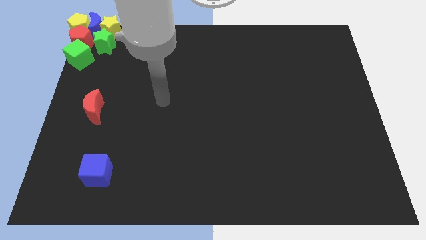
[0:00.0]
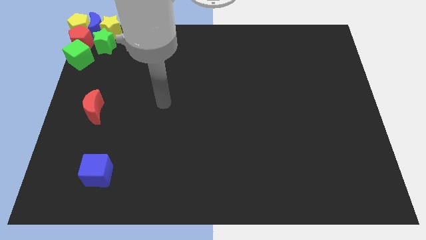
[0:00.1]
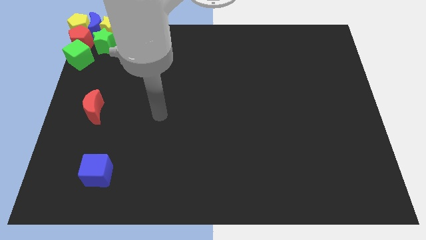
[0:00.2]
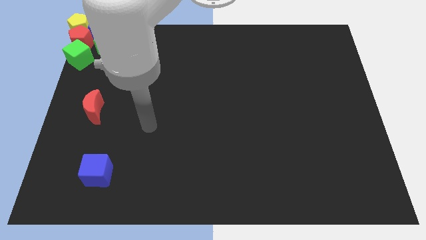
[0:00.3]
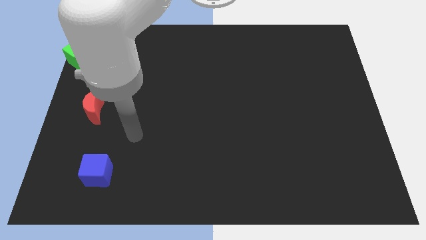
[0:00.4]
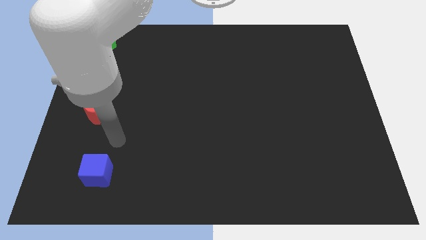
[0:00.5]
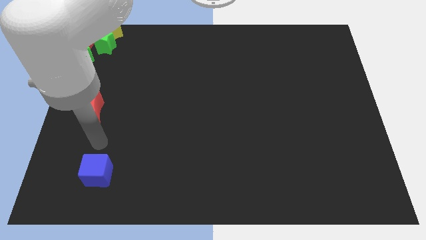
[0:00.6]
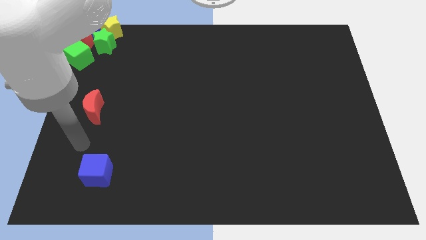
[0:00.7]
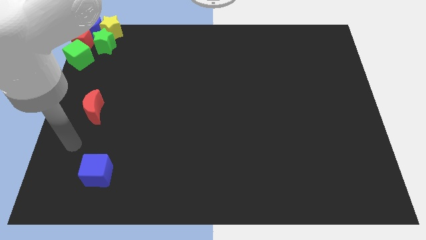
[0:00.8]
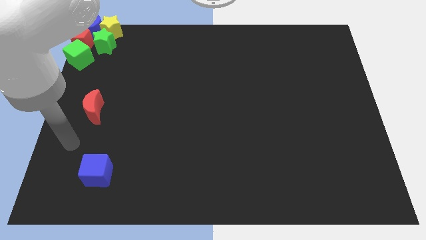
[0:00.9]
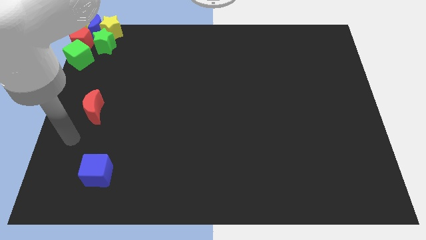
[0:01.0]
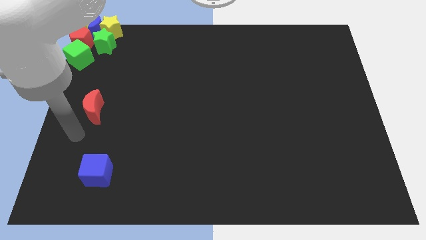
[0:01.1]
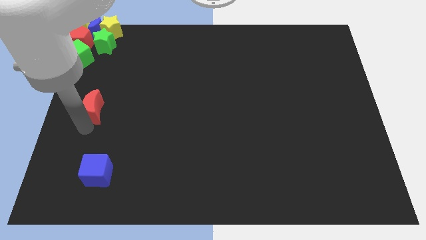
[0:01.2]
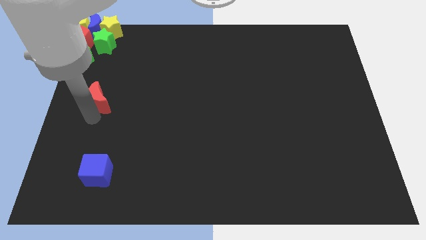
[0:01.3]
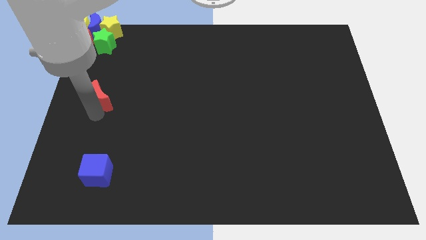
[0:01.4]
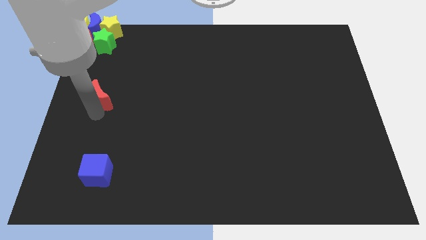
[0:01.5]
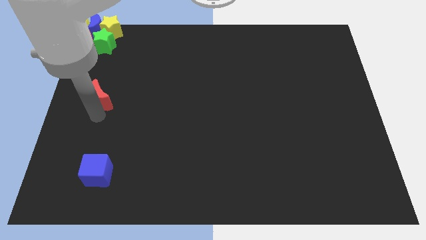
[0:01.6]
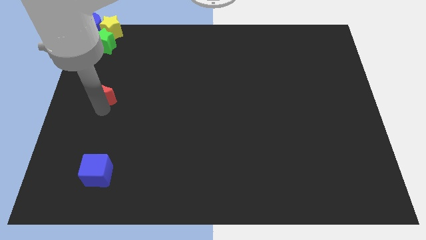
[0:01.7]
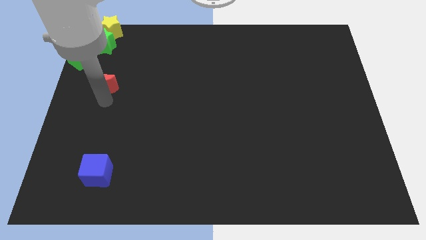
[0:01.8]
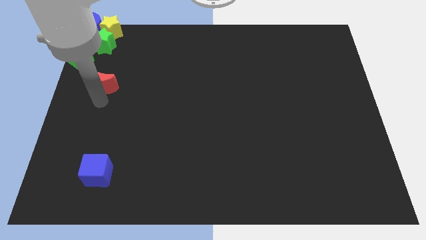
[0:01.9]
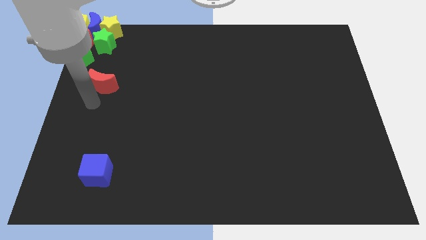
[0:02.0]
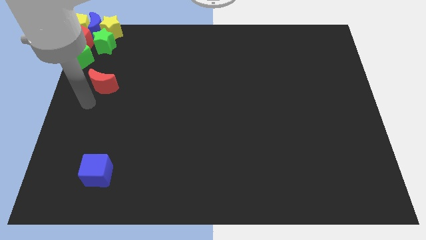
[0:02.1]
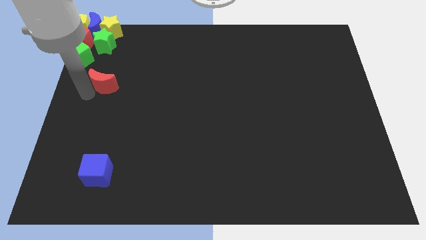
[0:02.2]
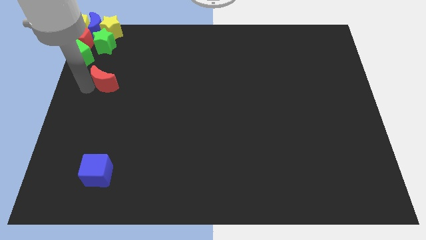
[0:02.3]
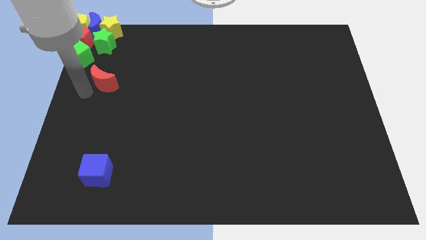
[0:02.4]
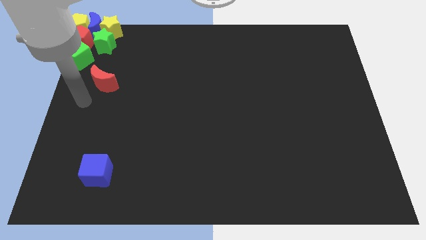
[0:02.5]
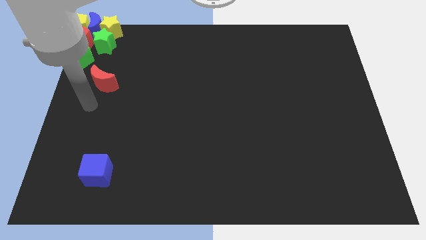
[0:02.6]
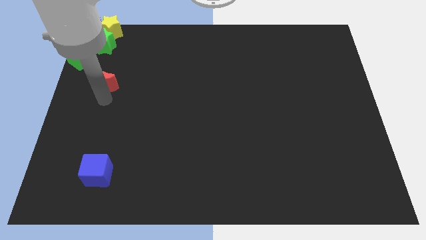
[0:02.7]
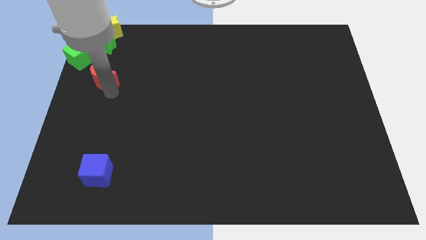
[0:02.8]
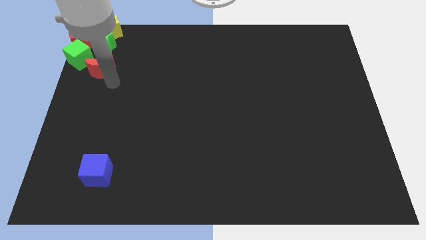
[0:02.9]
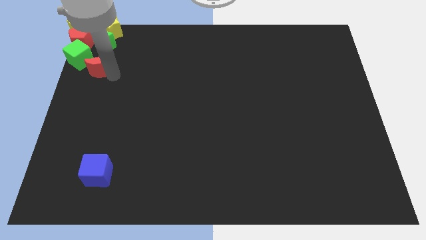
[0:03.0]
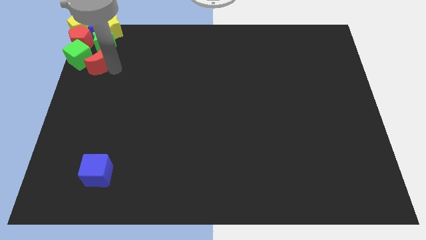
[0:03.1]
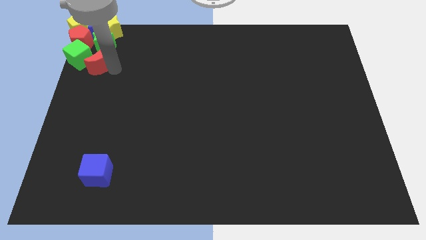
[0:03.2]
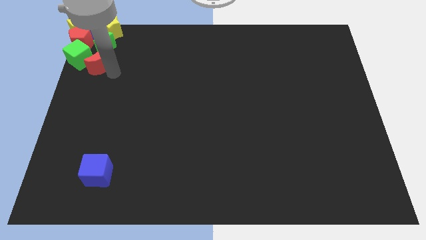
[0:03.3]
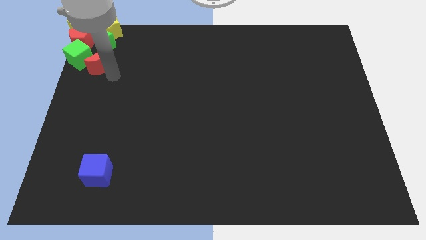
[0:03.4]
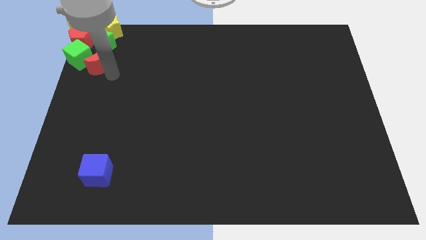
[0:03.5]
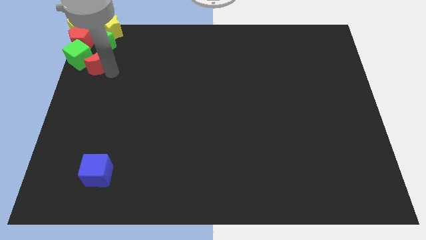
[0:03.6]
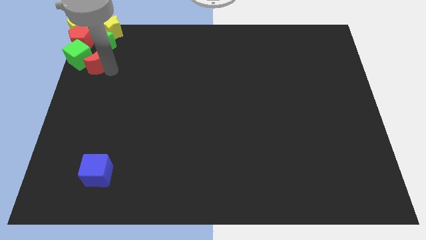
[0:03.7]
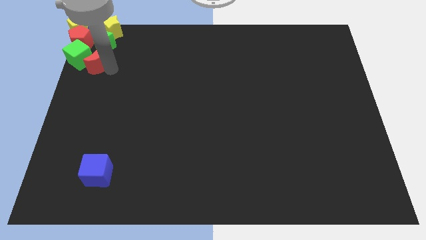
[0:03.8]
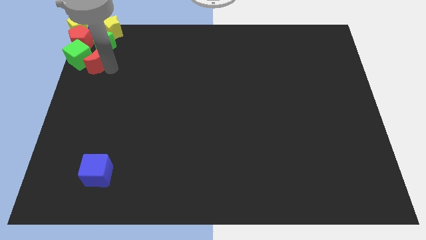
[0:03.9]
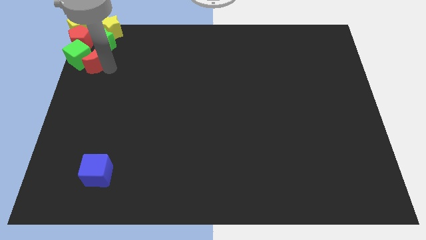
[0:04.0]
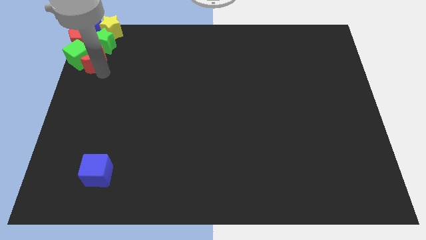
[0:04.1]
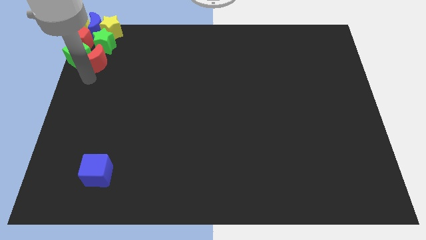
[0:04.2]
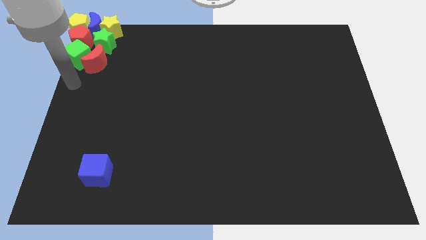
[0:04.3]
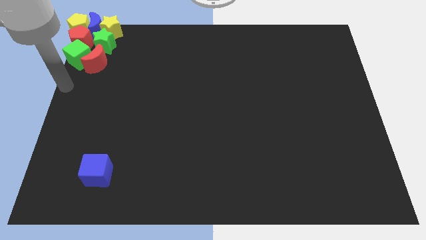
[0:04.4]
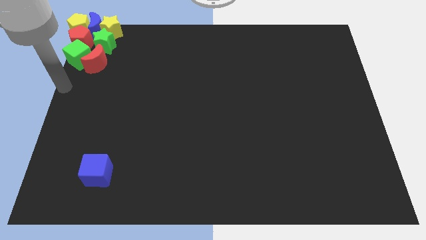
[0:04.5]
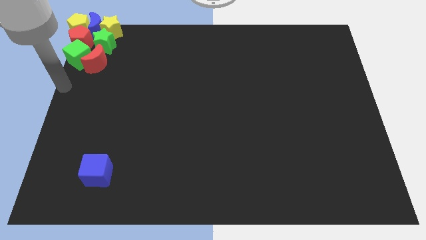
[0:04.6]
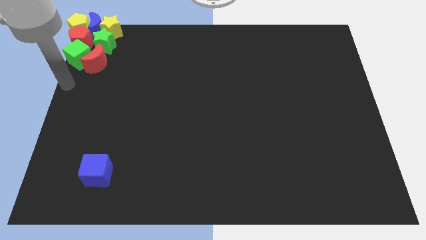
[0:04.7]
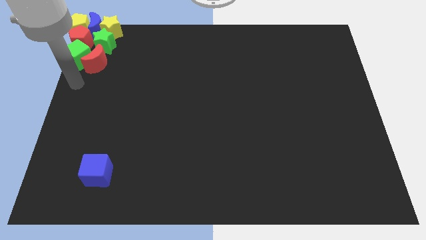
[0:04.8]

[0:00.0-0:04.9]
move the red moon into the group of blocks

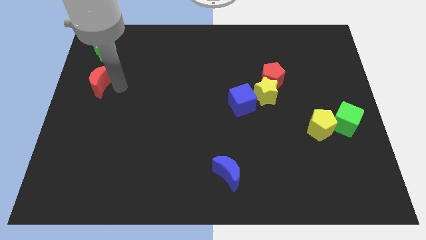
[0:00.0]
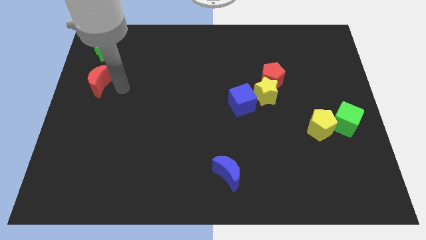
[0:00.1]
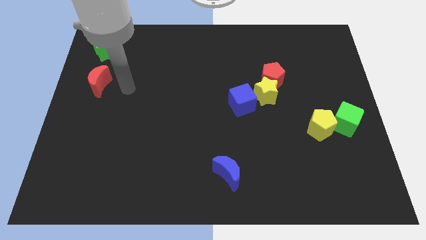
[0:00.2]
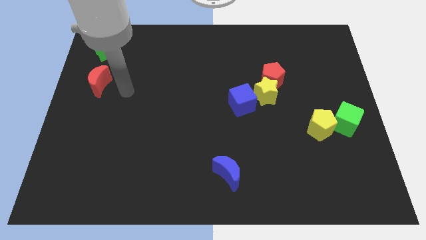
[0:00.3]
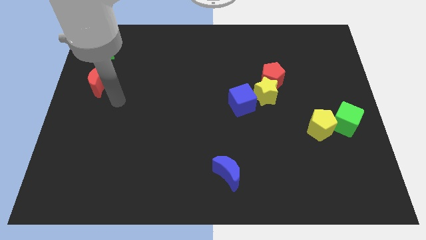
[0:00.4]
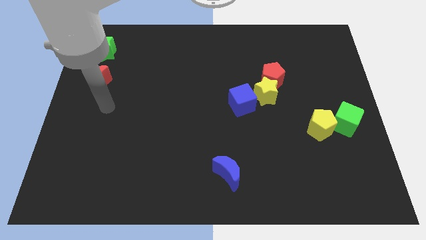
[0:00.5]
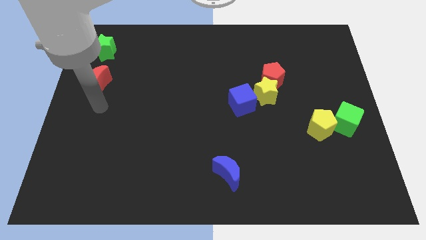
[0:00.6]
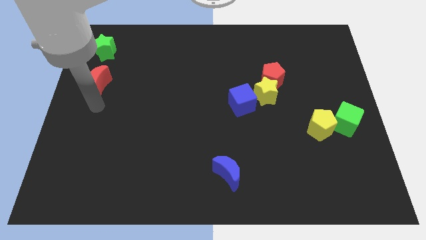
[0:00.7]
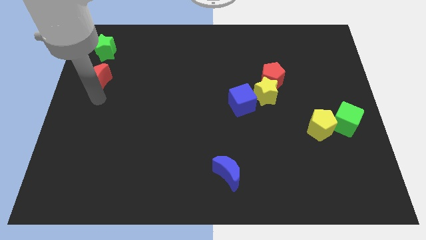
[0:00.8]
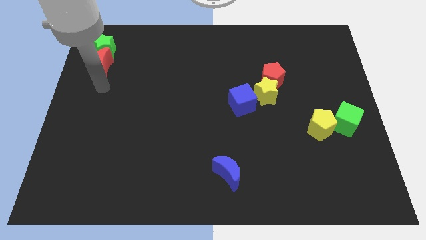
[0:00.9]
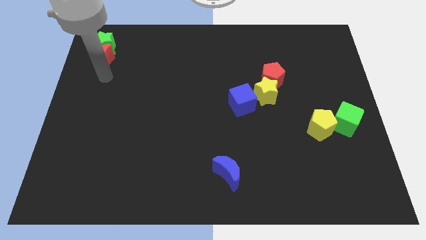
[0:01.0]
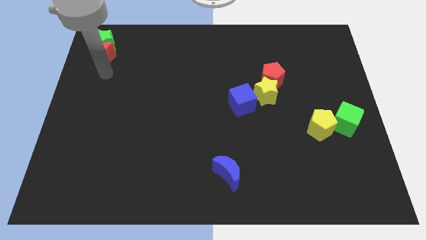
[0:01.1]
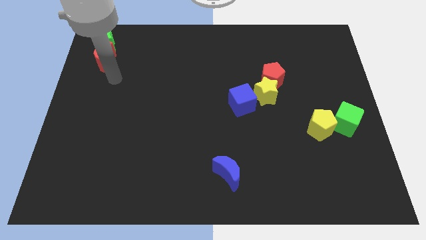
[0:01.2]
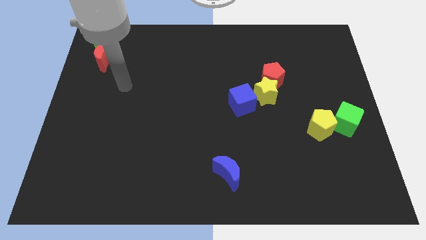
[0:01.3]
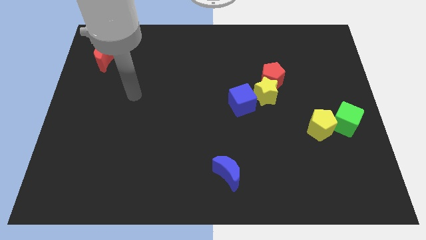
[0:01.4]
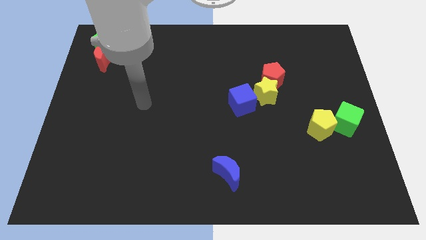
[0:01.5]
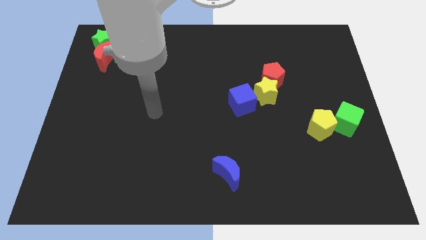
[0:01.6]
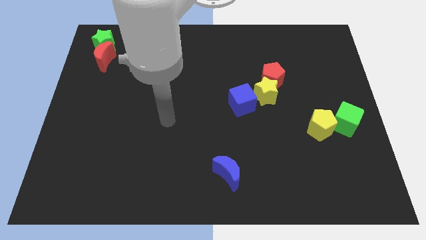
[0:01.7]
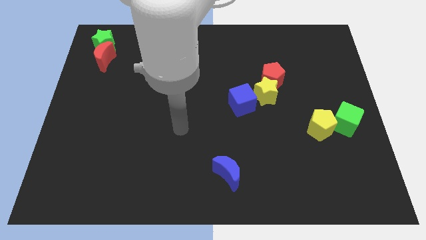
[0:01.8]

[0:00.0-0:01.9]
put red moon and green star together

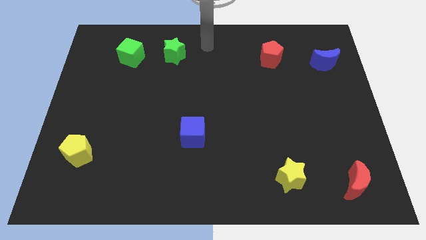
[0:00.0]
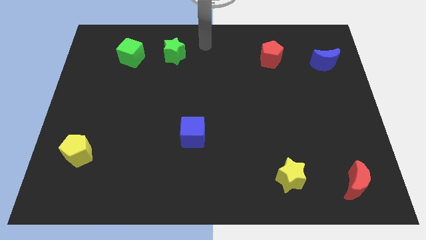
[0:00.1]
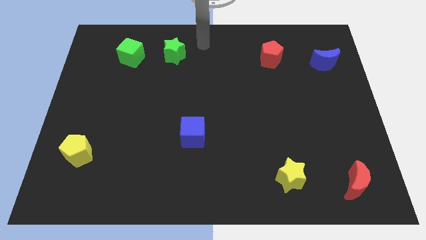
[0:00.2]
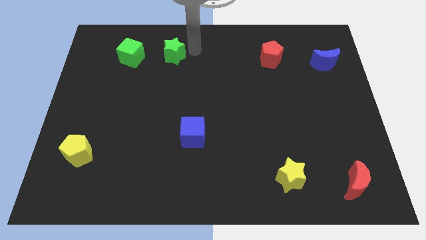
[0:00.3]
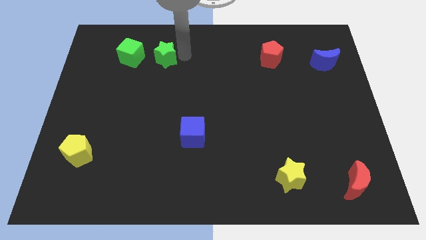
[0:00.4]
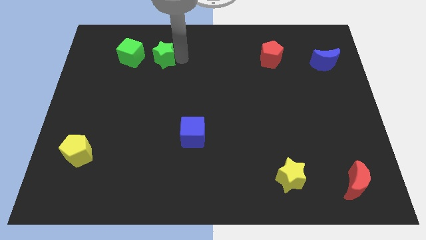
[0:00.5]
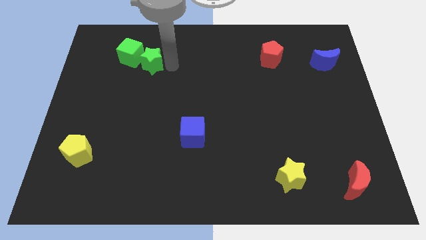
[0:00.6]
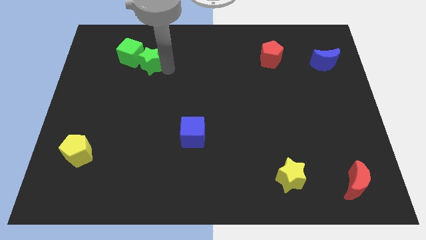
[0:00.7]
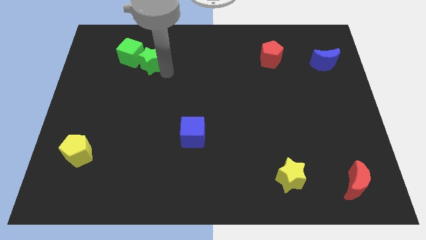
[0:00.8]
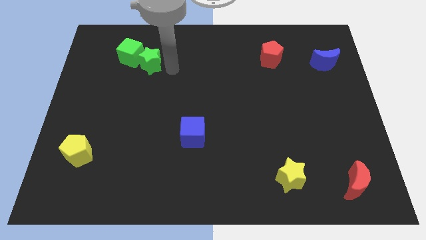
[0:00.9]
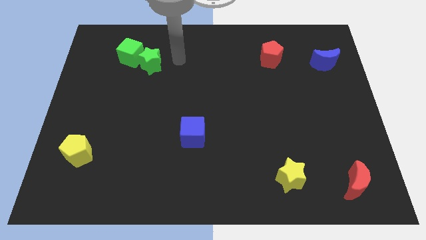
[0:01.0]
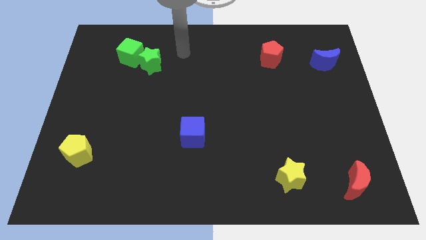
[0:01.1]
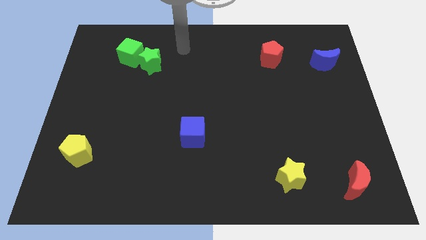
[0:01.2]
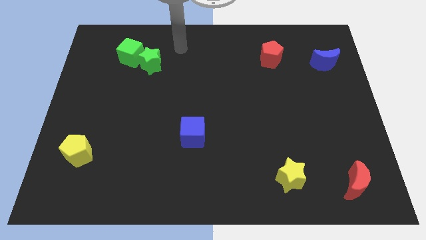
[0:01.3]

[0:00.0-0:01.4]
push the green star into green cube

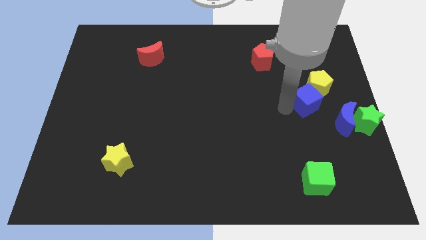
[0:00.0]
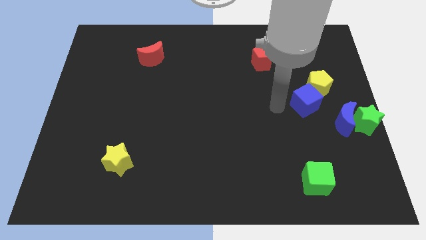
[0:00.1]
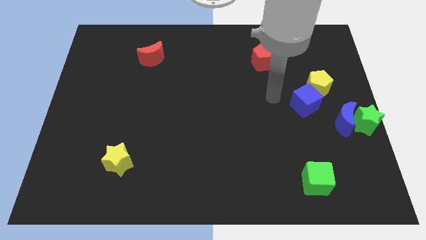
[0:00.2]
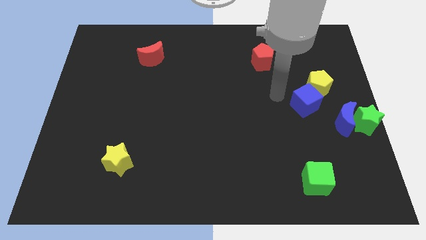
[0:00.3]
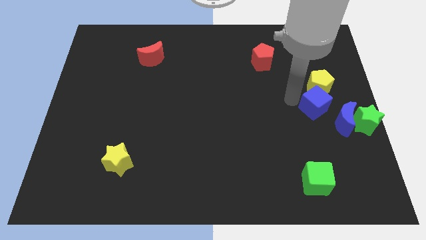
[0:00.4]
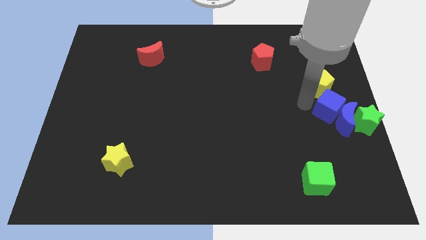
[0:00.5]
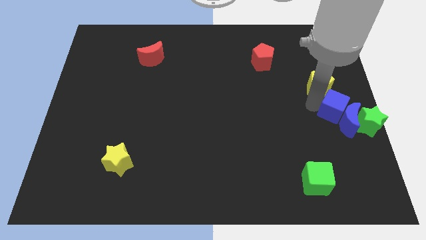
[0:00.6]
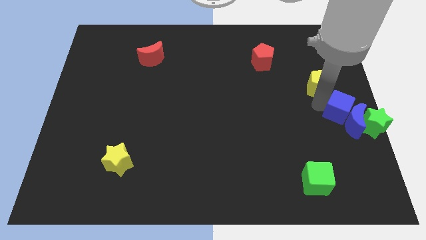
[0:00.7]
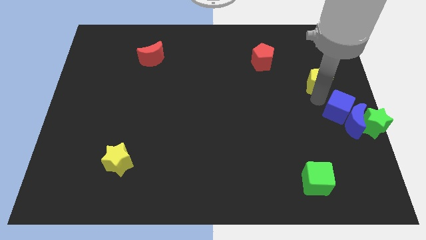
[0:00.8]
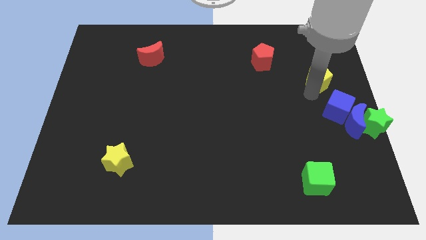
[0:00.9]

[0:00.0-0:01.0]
move the blue cube into the left side of the blue crescent
